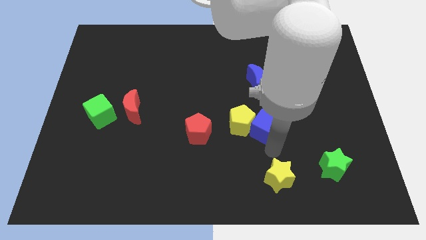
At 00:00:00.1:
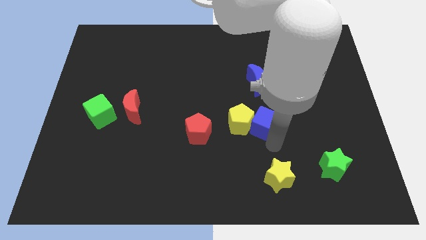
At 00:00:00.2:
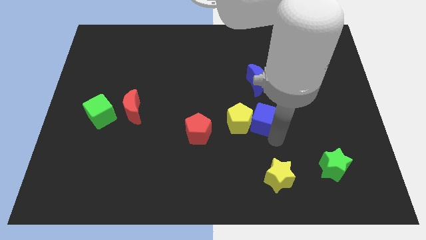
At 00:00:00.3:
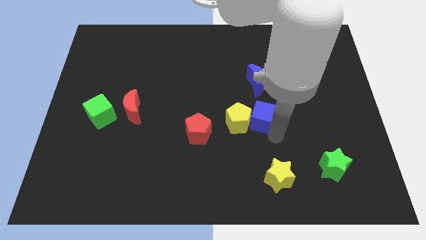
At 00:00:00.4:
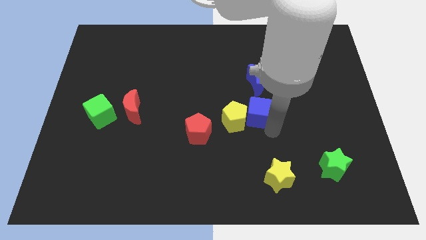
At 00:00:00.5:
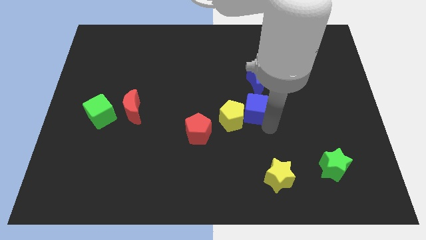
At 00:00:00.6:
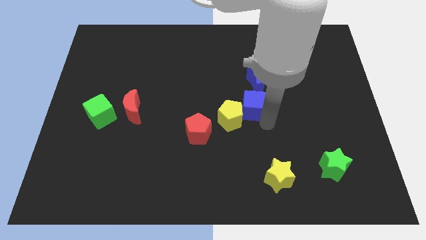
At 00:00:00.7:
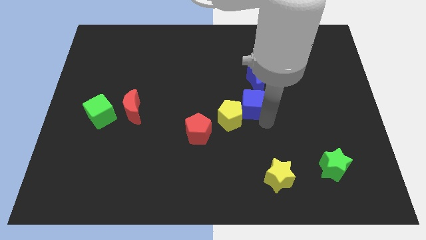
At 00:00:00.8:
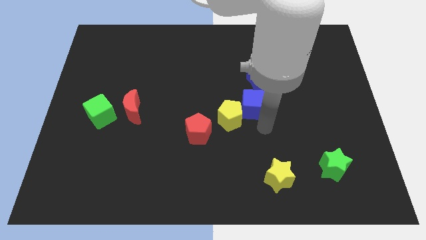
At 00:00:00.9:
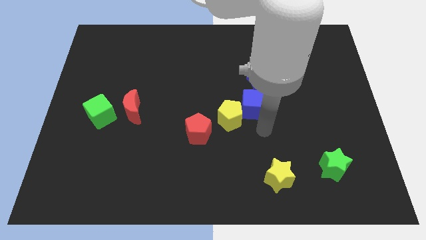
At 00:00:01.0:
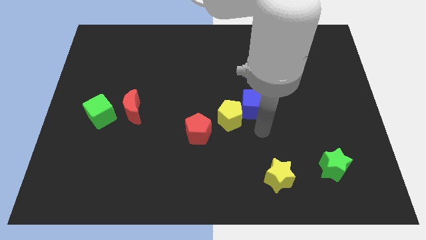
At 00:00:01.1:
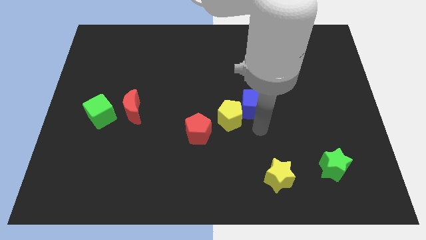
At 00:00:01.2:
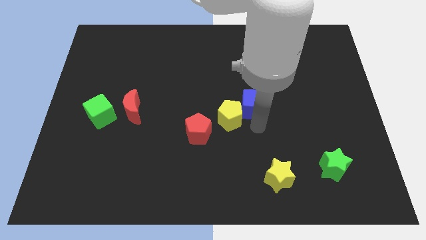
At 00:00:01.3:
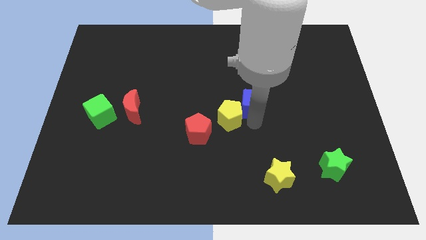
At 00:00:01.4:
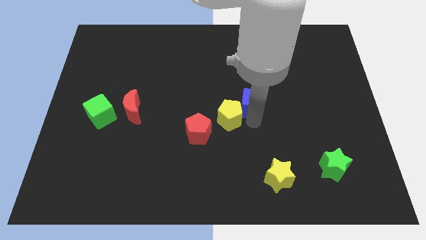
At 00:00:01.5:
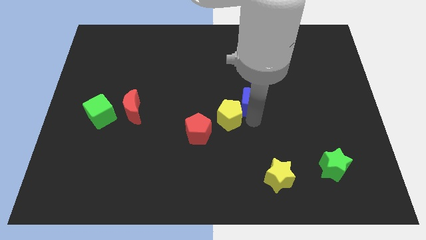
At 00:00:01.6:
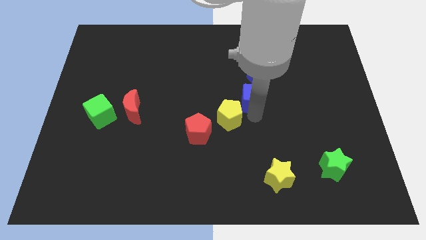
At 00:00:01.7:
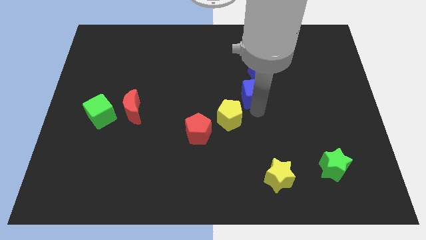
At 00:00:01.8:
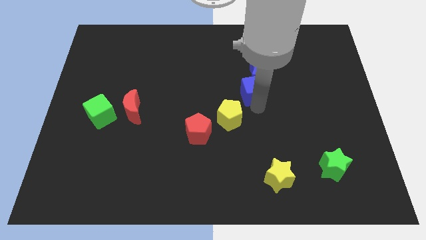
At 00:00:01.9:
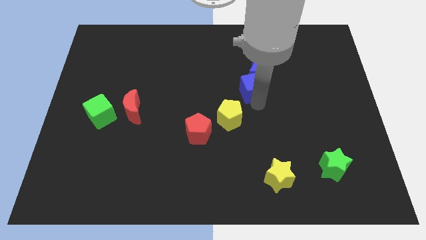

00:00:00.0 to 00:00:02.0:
move the blue cube into the blue crescent

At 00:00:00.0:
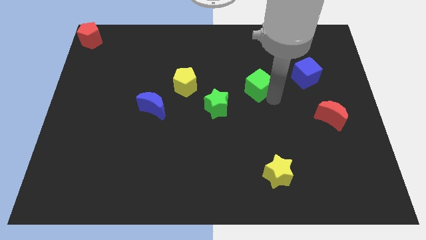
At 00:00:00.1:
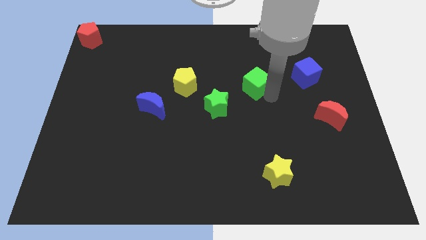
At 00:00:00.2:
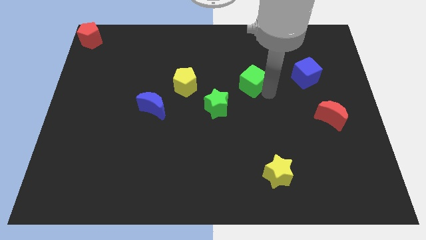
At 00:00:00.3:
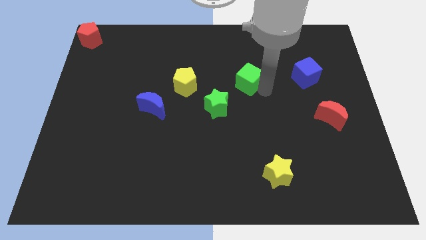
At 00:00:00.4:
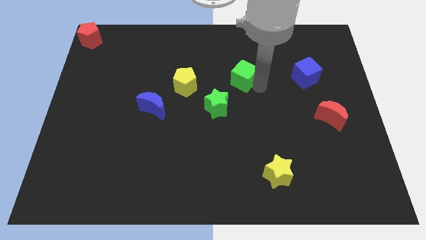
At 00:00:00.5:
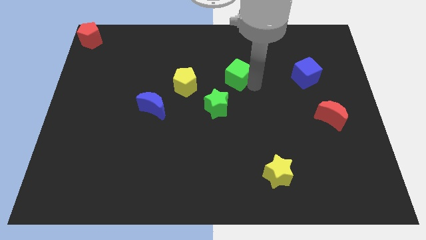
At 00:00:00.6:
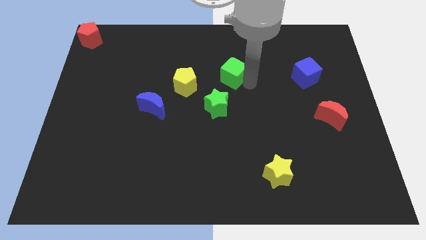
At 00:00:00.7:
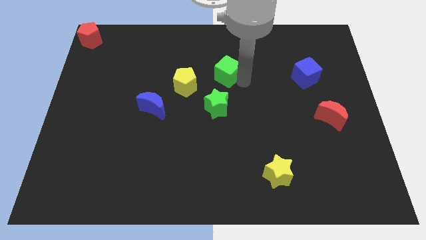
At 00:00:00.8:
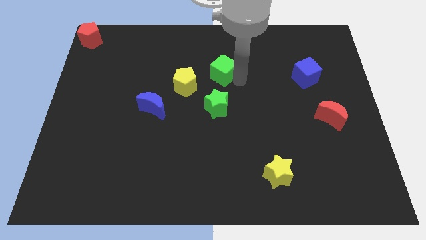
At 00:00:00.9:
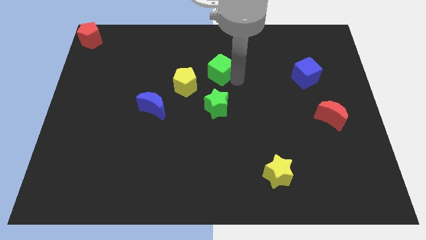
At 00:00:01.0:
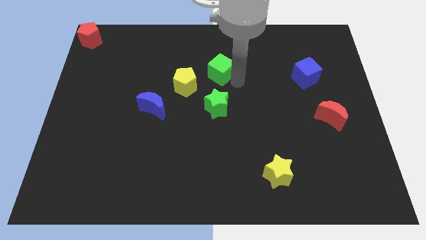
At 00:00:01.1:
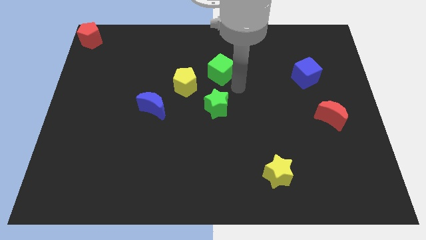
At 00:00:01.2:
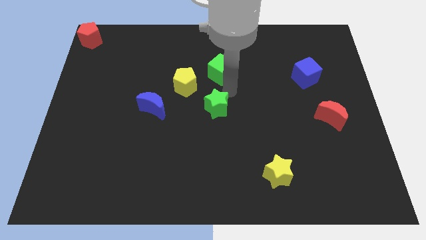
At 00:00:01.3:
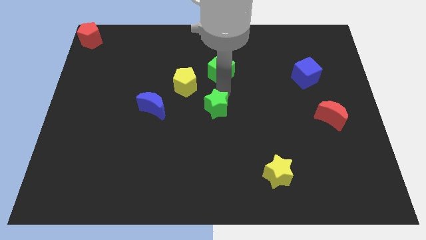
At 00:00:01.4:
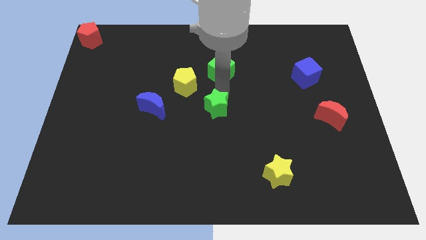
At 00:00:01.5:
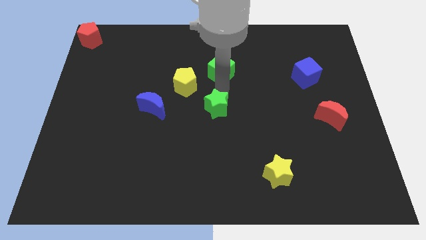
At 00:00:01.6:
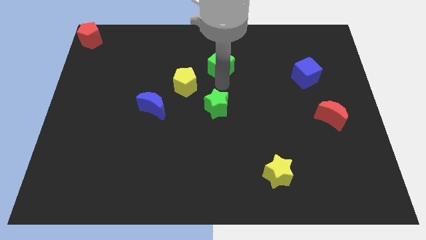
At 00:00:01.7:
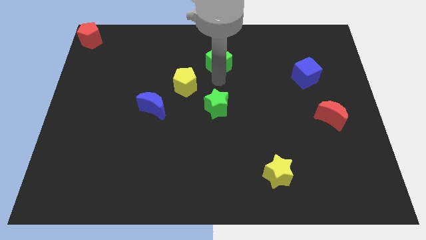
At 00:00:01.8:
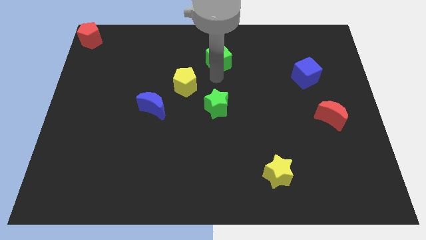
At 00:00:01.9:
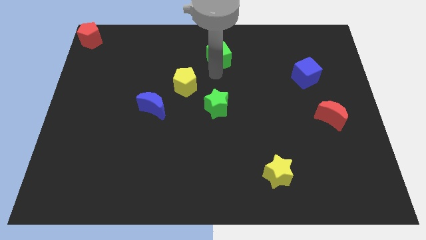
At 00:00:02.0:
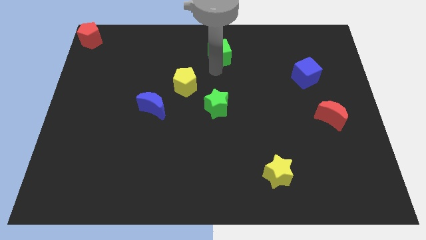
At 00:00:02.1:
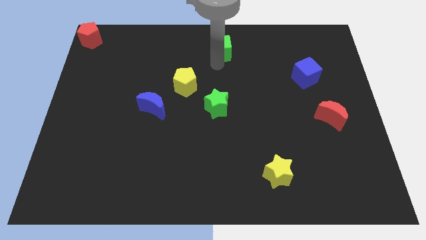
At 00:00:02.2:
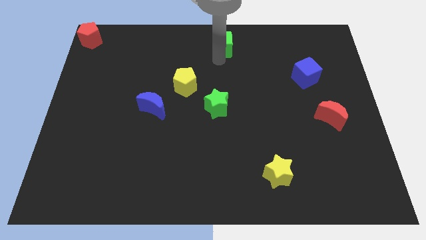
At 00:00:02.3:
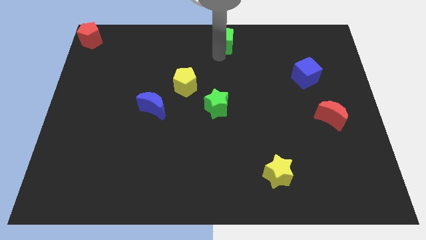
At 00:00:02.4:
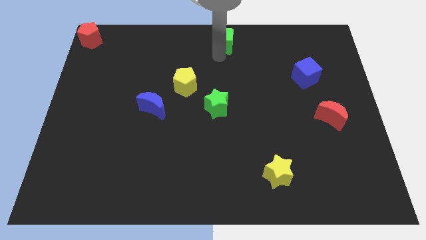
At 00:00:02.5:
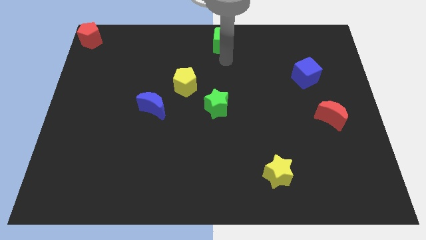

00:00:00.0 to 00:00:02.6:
push the green cube to the top center of the board

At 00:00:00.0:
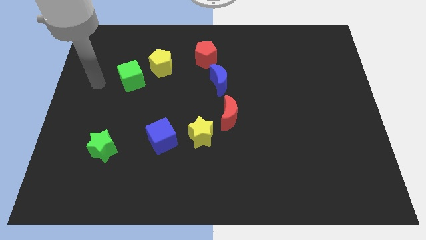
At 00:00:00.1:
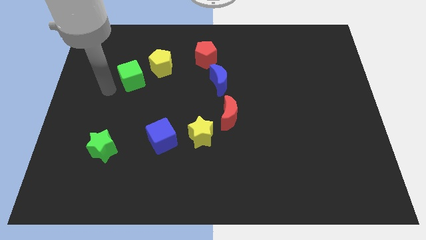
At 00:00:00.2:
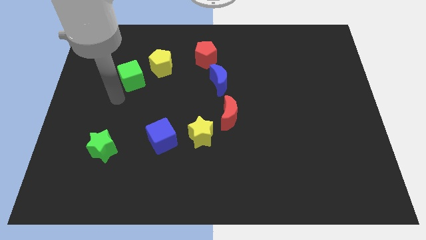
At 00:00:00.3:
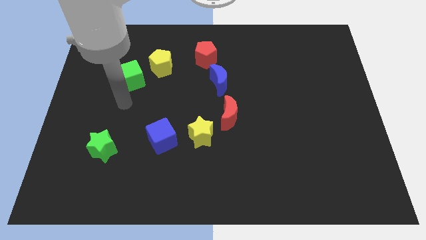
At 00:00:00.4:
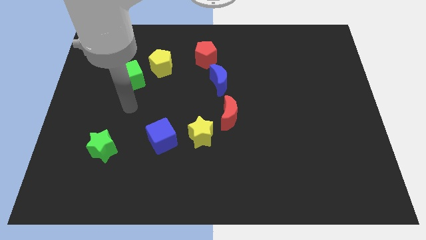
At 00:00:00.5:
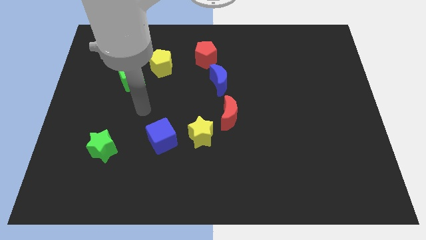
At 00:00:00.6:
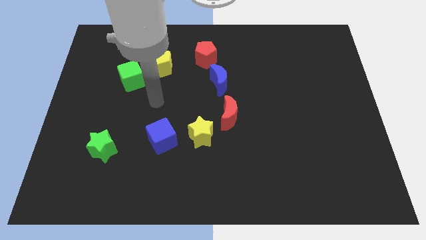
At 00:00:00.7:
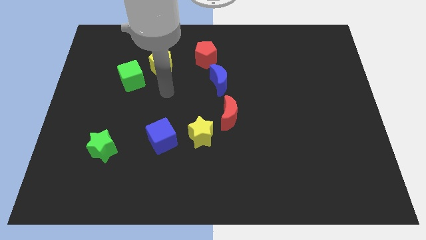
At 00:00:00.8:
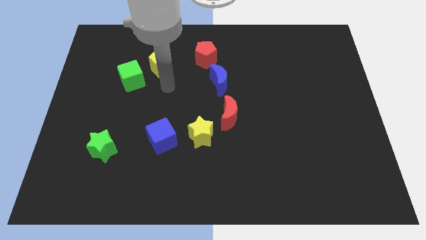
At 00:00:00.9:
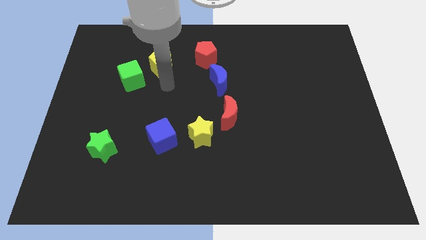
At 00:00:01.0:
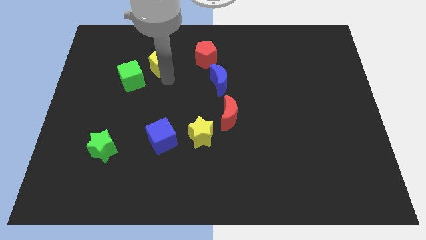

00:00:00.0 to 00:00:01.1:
point your arm at the bottom of yellow pentagon

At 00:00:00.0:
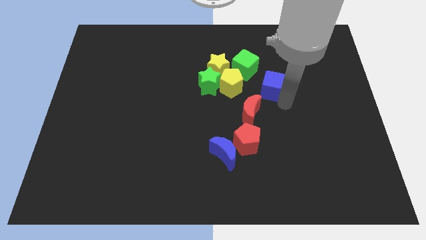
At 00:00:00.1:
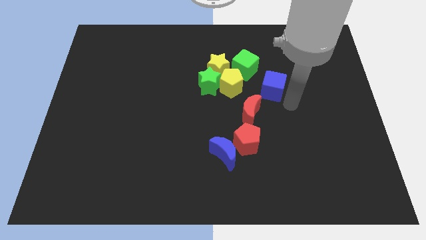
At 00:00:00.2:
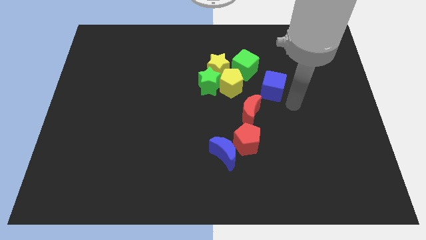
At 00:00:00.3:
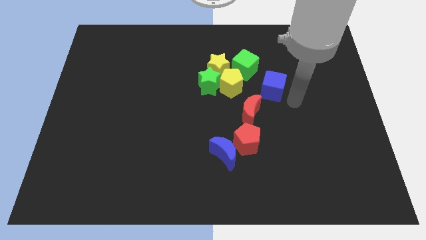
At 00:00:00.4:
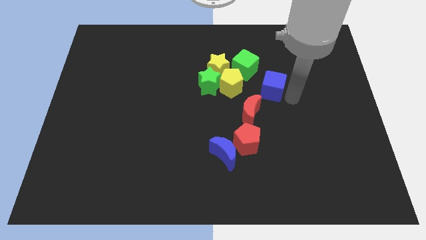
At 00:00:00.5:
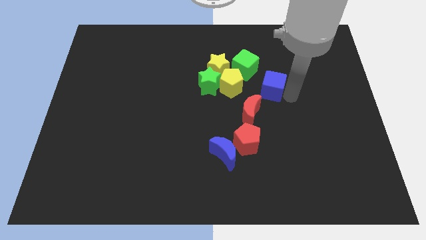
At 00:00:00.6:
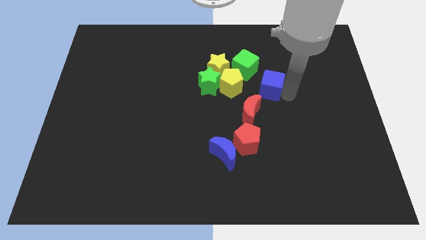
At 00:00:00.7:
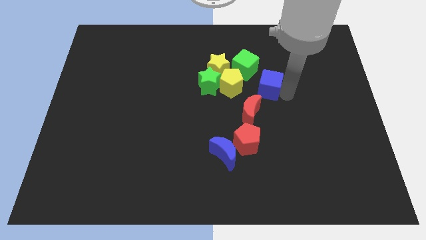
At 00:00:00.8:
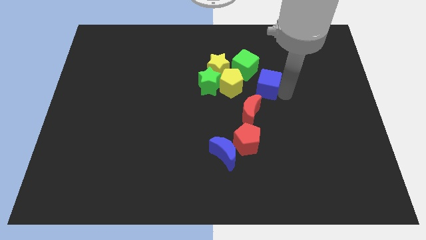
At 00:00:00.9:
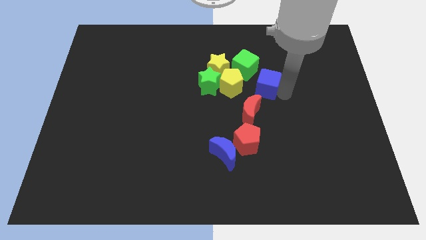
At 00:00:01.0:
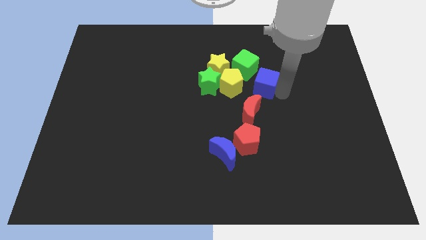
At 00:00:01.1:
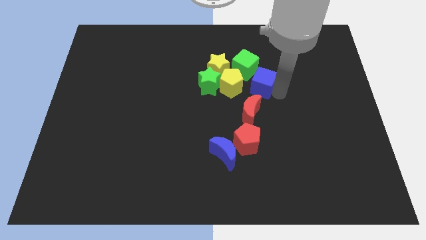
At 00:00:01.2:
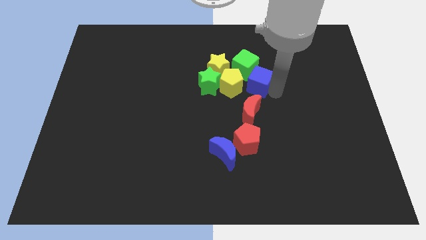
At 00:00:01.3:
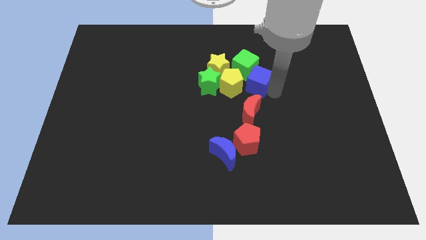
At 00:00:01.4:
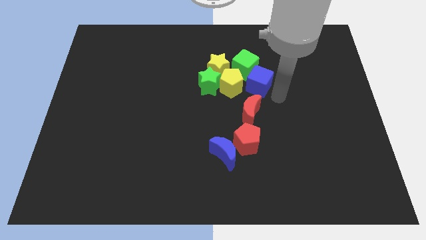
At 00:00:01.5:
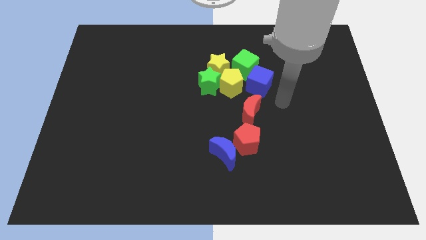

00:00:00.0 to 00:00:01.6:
push the blue cube above the red crescent

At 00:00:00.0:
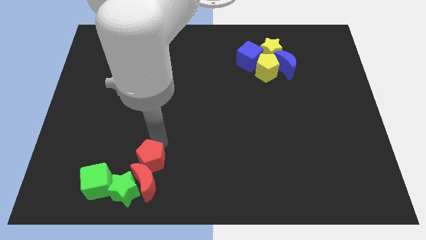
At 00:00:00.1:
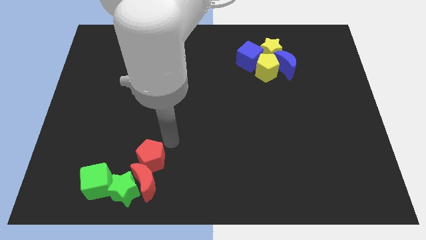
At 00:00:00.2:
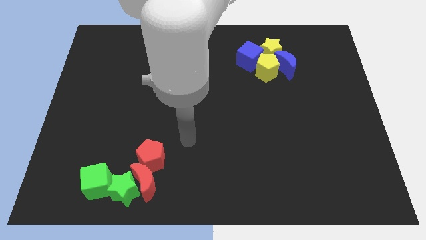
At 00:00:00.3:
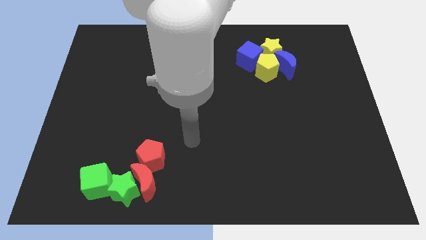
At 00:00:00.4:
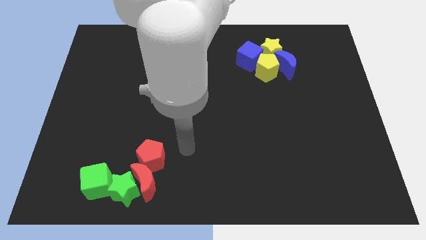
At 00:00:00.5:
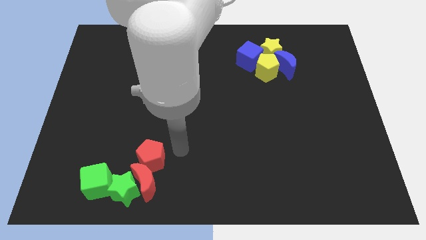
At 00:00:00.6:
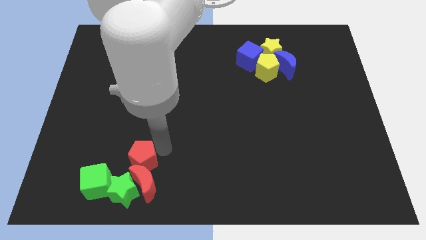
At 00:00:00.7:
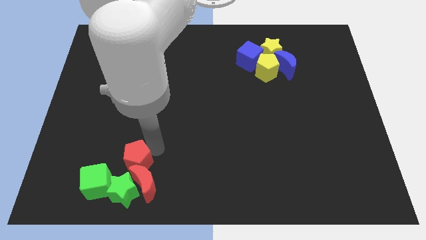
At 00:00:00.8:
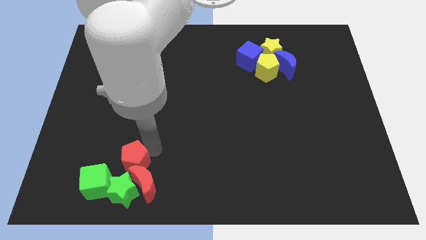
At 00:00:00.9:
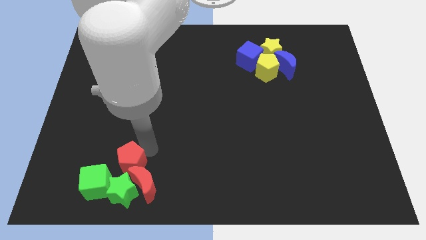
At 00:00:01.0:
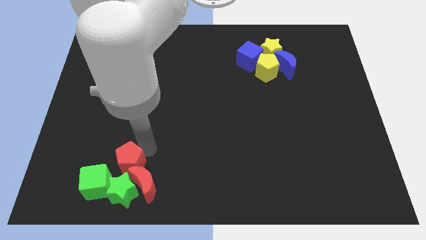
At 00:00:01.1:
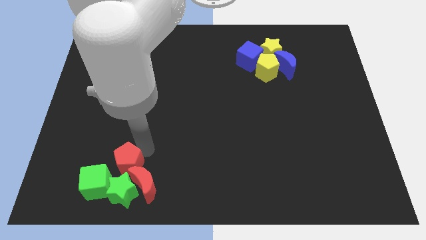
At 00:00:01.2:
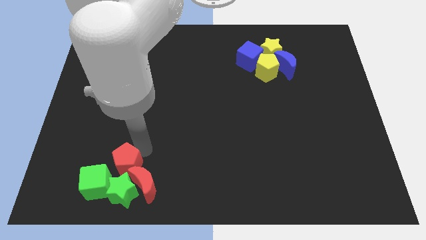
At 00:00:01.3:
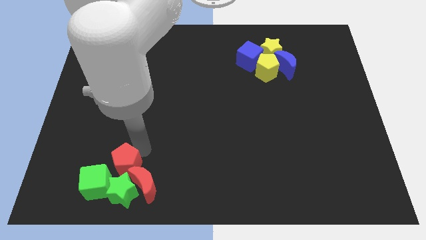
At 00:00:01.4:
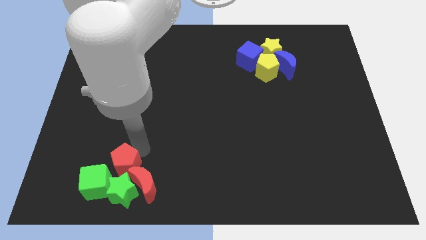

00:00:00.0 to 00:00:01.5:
place red pentagon above the green star
